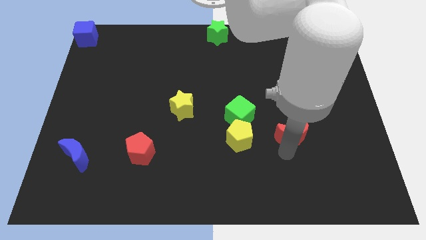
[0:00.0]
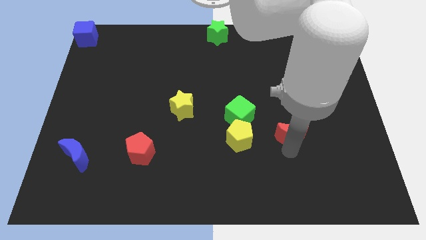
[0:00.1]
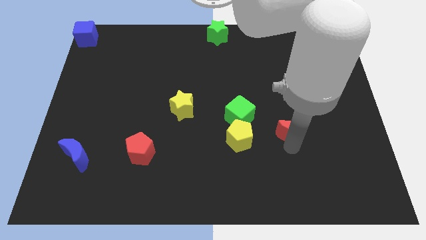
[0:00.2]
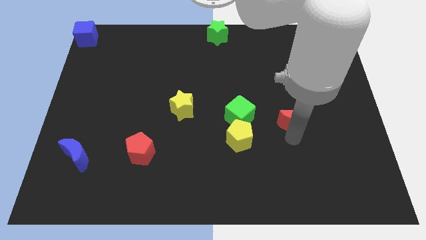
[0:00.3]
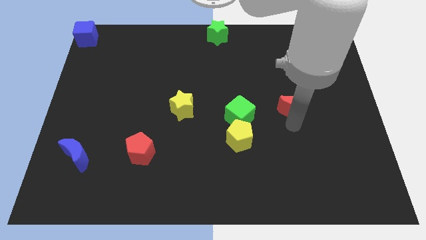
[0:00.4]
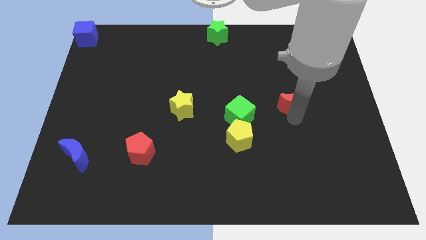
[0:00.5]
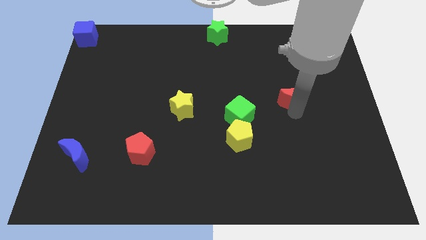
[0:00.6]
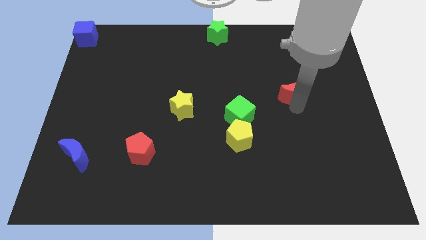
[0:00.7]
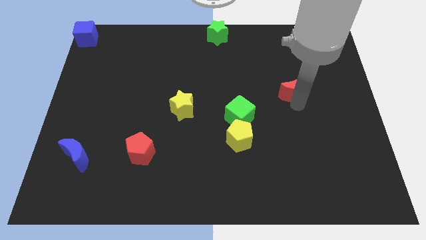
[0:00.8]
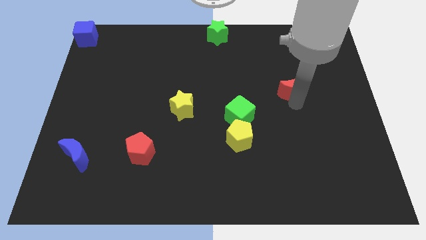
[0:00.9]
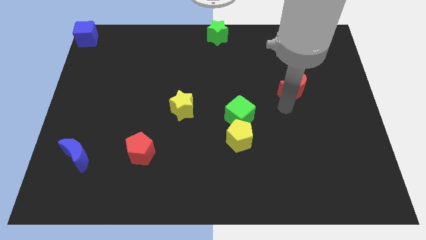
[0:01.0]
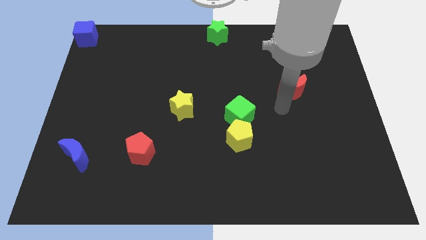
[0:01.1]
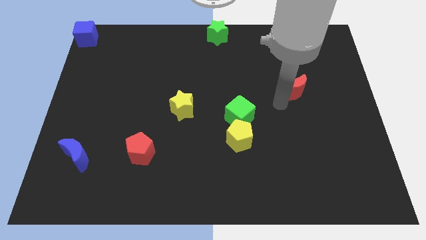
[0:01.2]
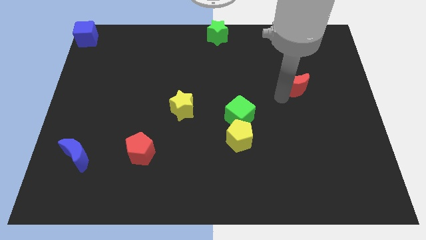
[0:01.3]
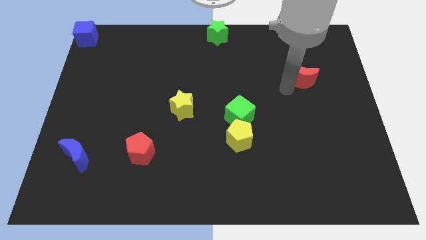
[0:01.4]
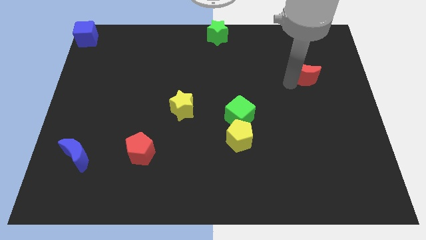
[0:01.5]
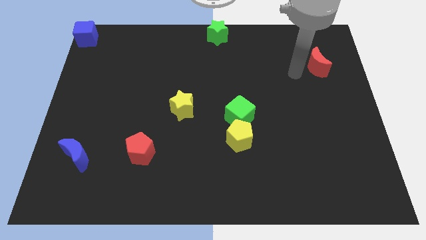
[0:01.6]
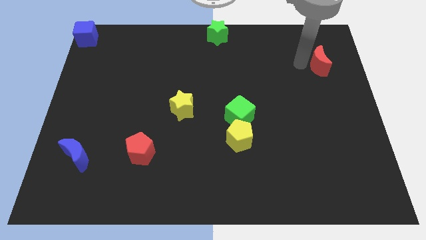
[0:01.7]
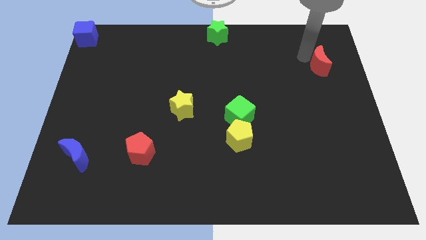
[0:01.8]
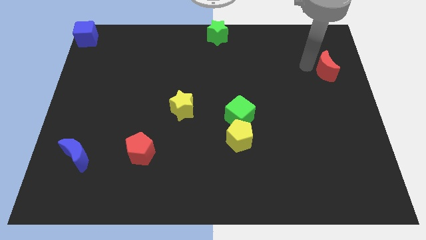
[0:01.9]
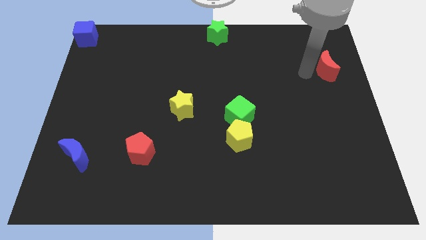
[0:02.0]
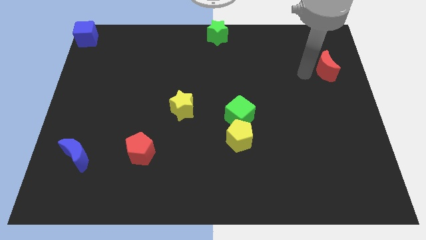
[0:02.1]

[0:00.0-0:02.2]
move the red crescent to the top right corner of the board

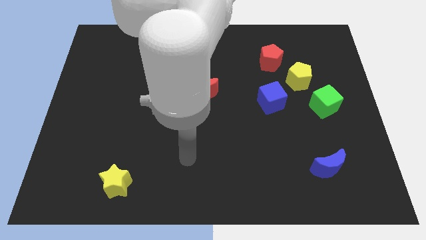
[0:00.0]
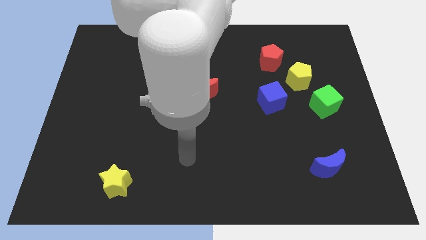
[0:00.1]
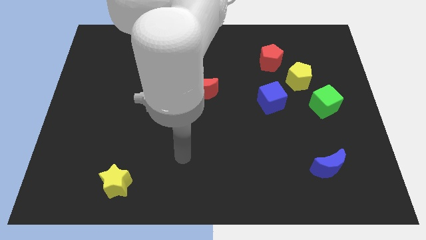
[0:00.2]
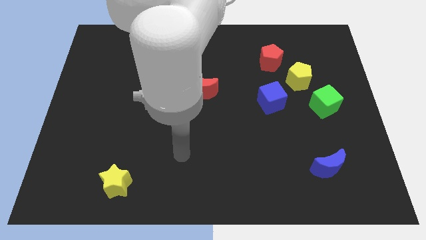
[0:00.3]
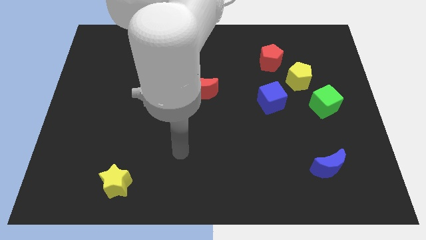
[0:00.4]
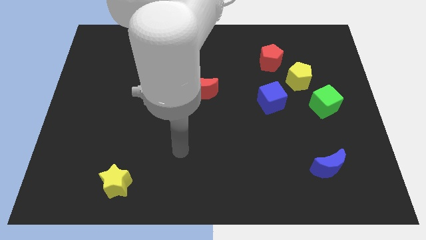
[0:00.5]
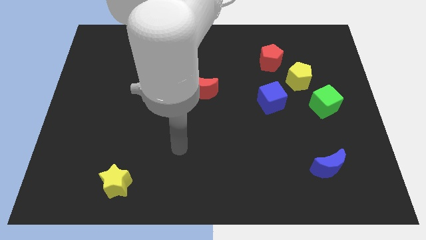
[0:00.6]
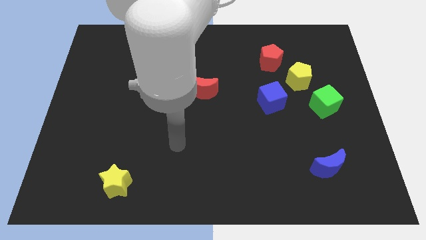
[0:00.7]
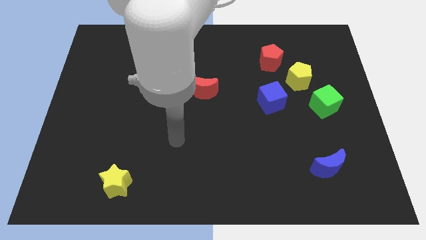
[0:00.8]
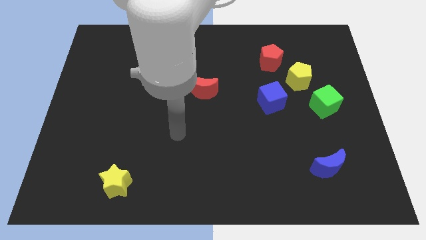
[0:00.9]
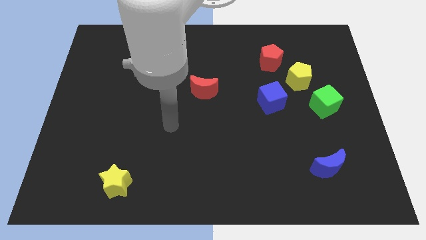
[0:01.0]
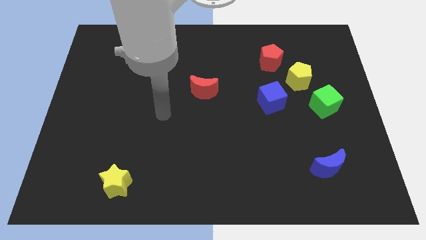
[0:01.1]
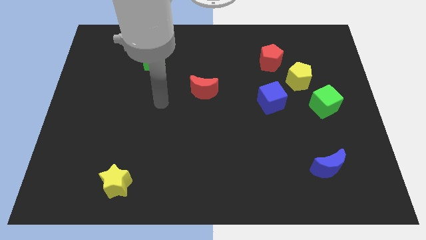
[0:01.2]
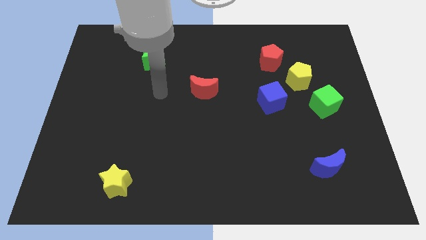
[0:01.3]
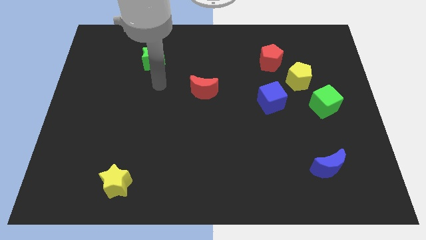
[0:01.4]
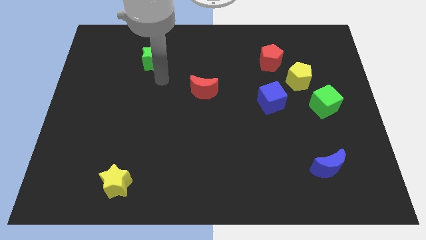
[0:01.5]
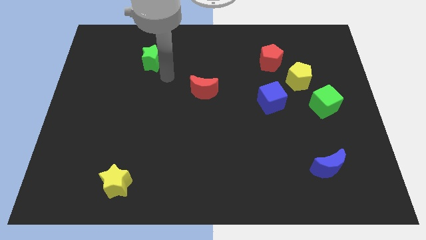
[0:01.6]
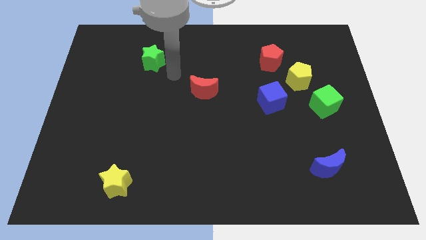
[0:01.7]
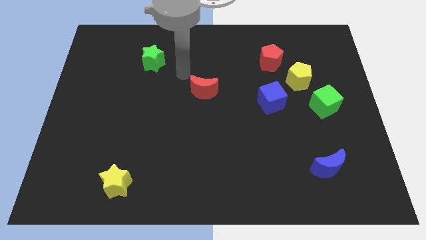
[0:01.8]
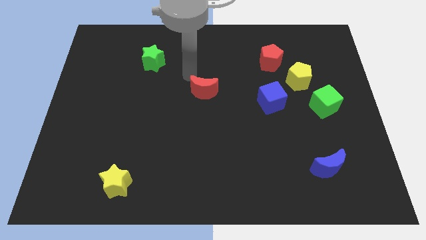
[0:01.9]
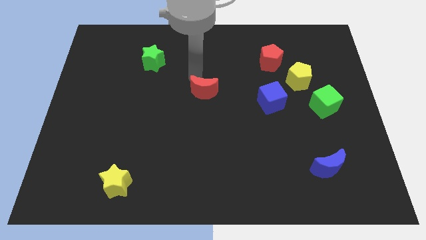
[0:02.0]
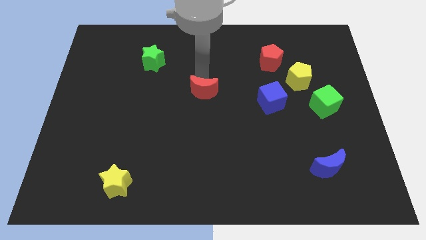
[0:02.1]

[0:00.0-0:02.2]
point the arm at the top of the red moon

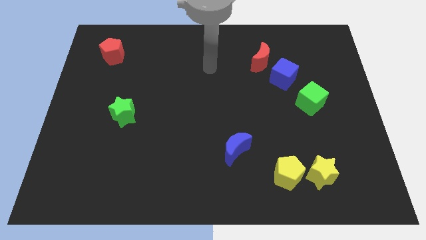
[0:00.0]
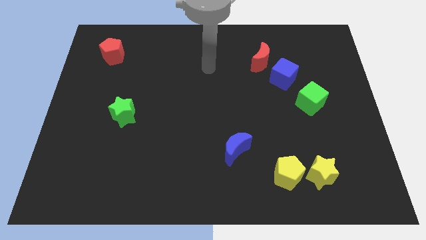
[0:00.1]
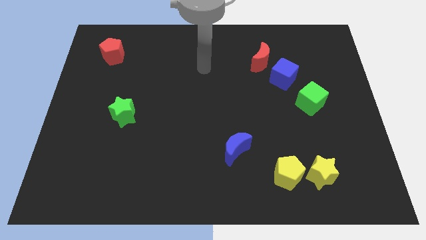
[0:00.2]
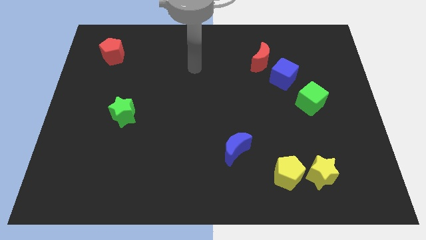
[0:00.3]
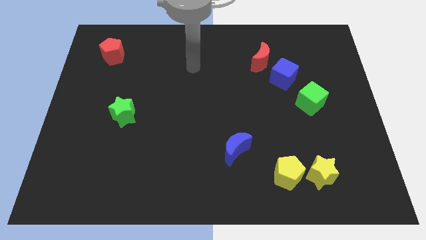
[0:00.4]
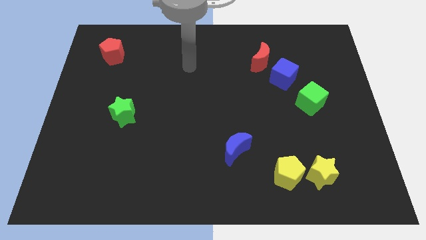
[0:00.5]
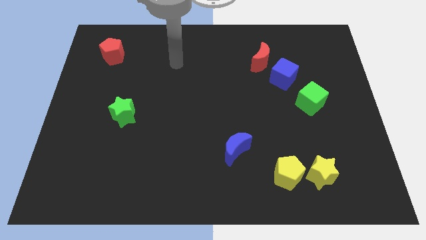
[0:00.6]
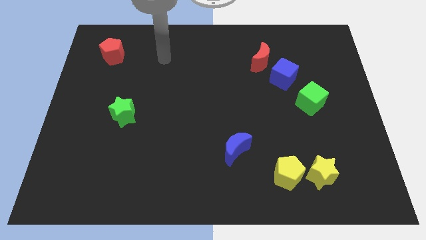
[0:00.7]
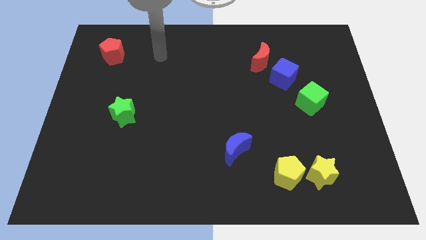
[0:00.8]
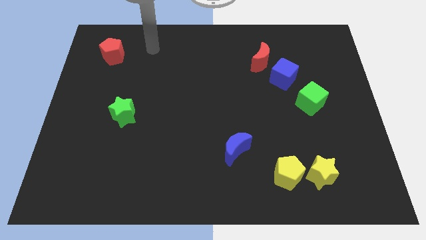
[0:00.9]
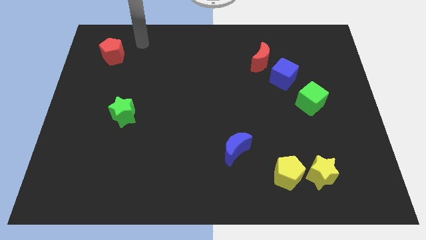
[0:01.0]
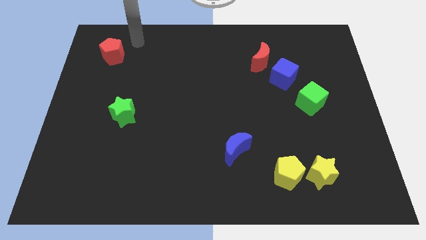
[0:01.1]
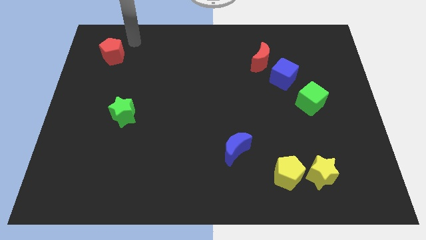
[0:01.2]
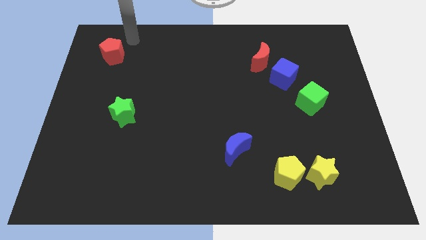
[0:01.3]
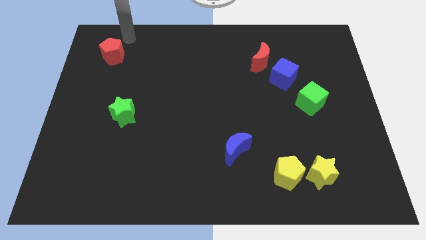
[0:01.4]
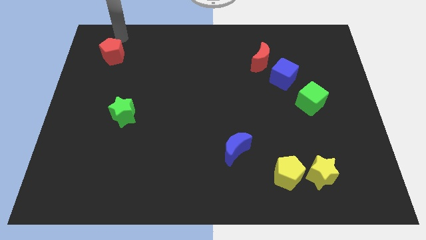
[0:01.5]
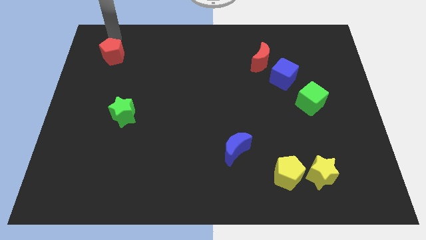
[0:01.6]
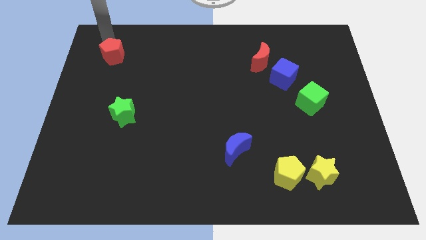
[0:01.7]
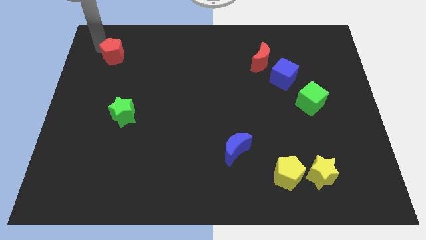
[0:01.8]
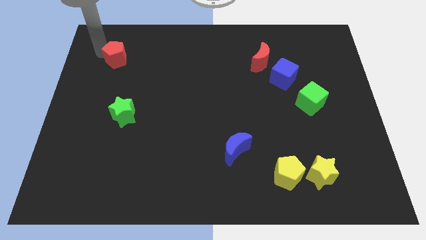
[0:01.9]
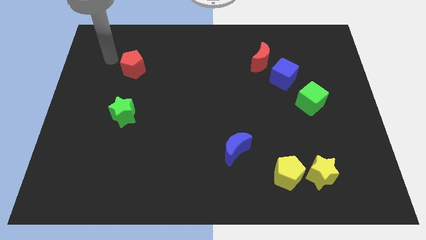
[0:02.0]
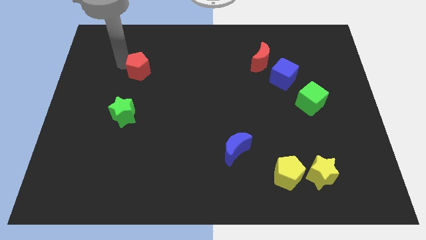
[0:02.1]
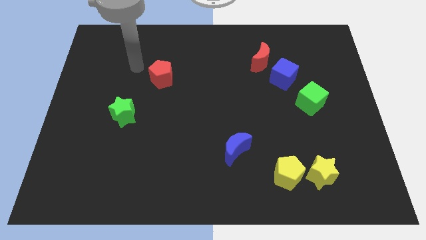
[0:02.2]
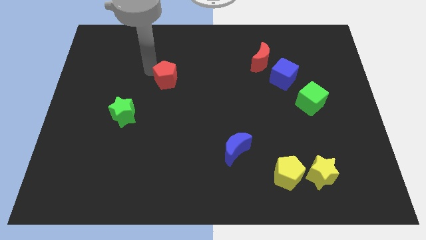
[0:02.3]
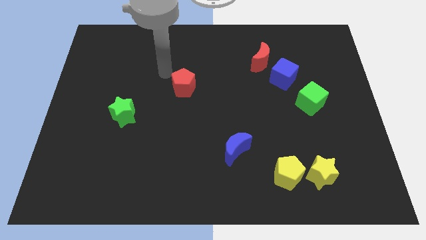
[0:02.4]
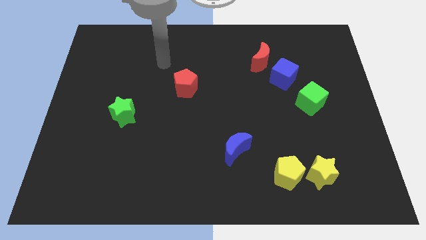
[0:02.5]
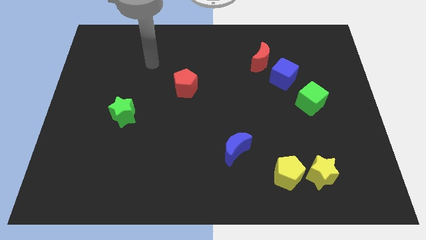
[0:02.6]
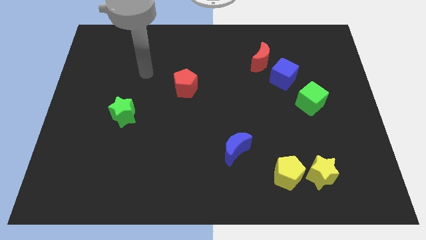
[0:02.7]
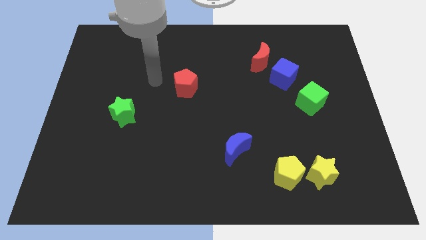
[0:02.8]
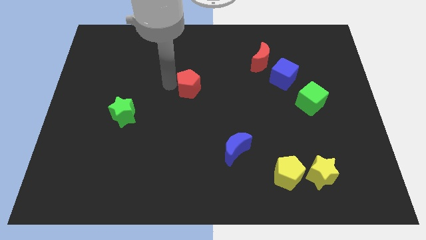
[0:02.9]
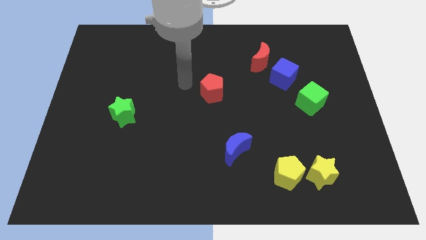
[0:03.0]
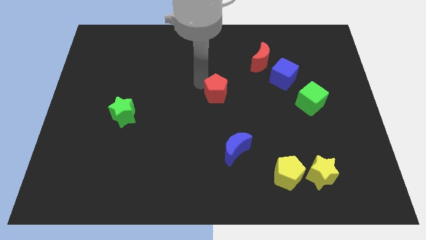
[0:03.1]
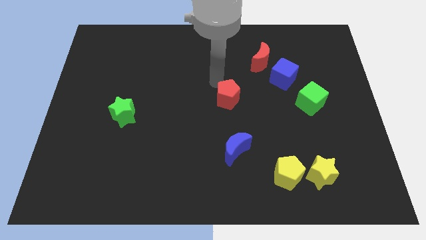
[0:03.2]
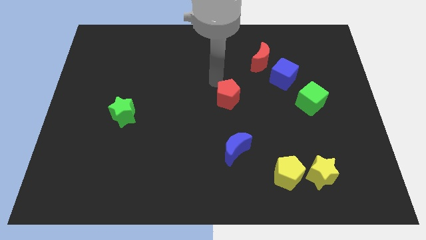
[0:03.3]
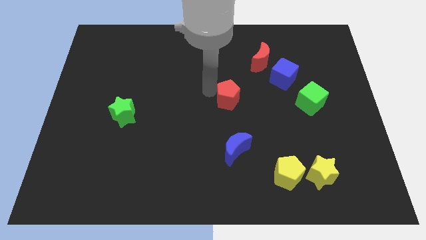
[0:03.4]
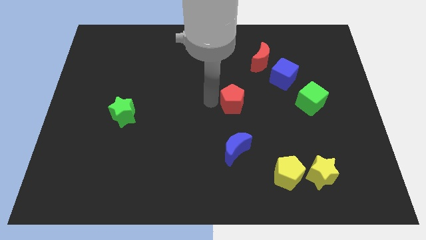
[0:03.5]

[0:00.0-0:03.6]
push the red pentagon towards the center

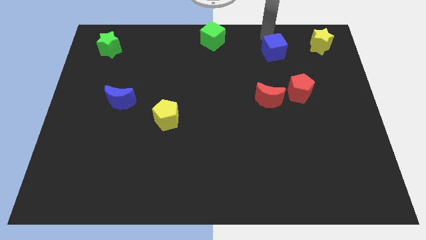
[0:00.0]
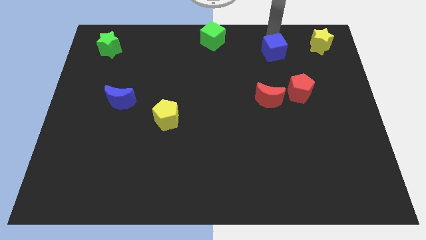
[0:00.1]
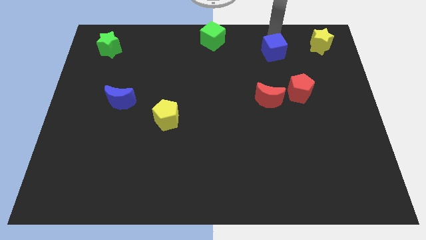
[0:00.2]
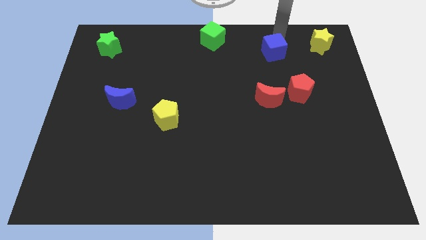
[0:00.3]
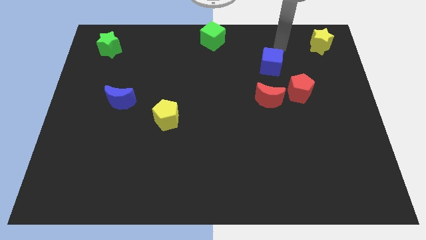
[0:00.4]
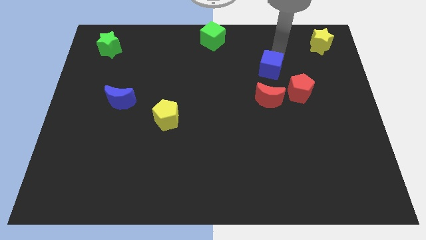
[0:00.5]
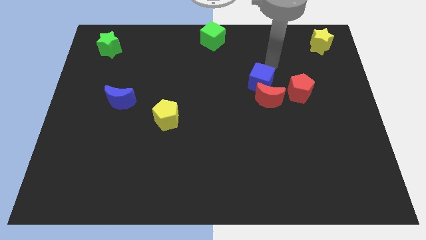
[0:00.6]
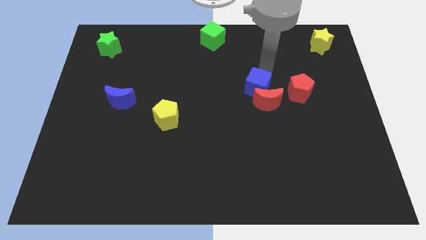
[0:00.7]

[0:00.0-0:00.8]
place blue cube to the top of red moon
